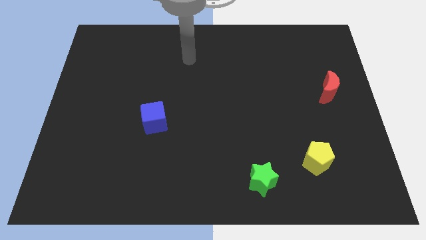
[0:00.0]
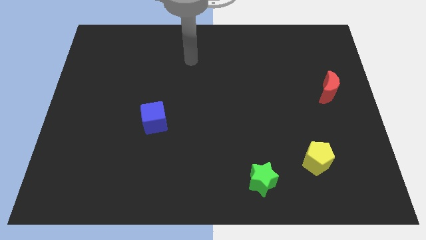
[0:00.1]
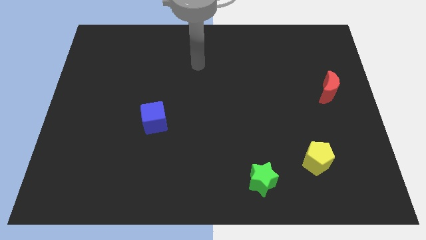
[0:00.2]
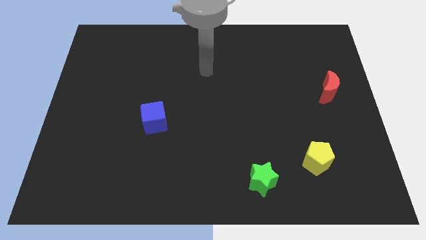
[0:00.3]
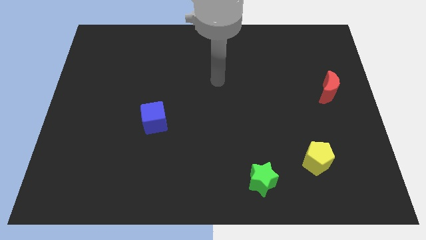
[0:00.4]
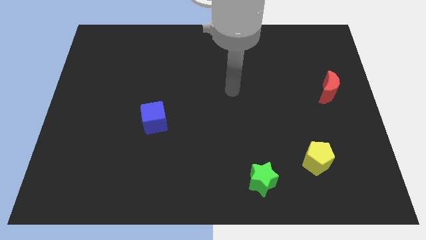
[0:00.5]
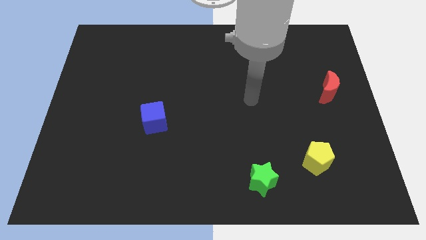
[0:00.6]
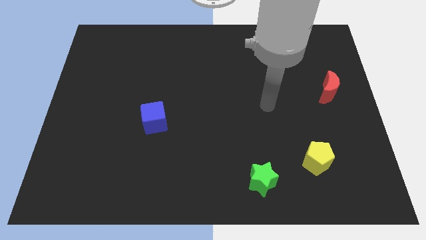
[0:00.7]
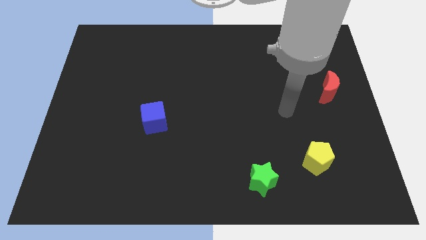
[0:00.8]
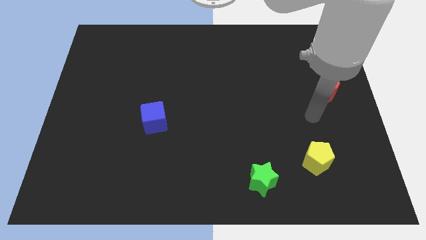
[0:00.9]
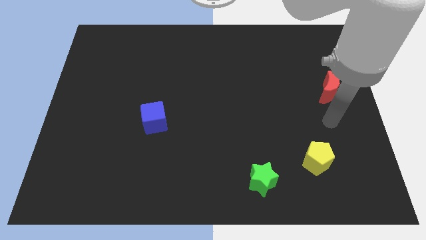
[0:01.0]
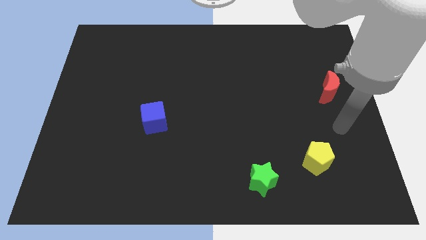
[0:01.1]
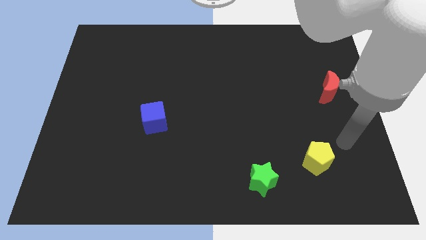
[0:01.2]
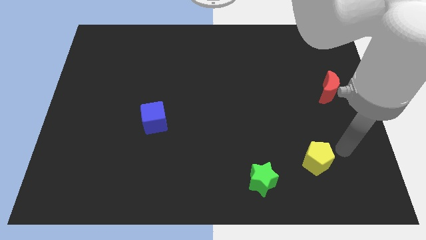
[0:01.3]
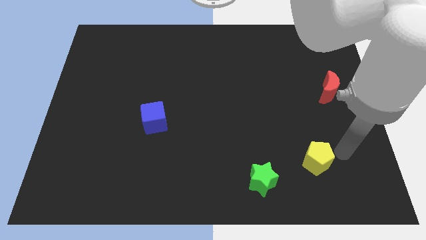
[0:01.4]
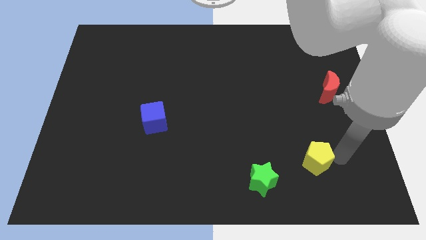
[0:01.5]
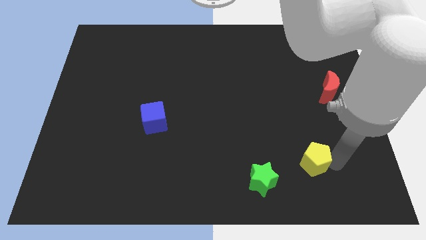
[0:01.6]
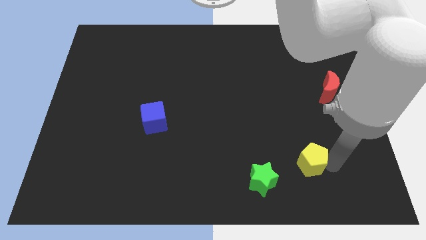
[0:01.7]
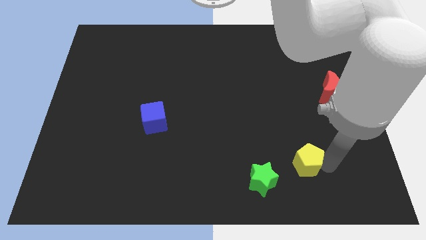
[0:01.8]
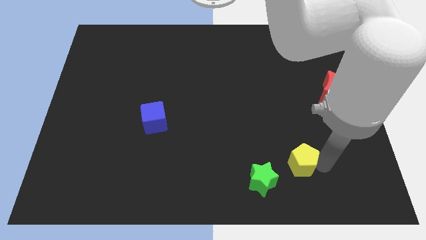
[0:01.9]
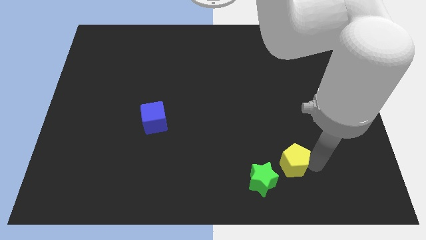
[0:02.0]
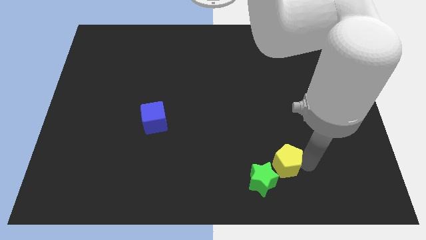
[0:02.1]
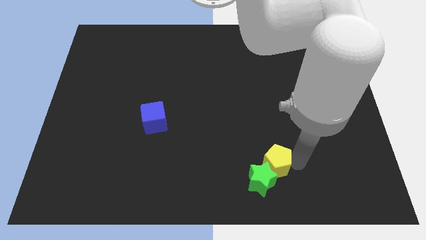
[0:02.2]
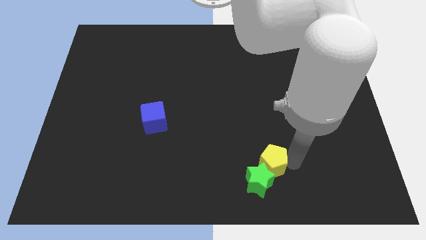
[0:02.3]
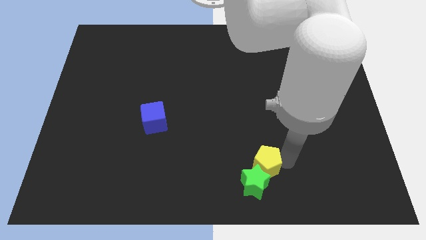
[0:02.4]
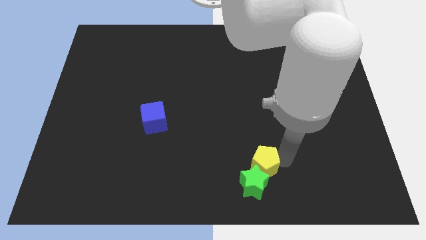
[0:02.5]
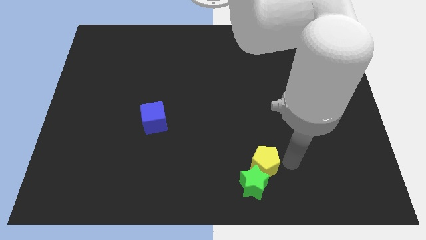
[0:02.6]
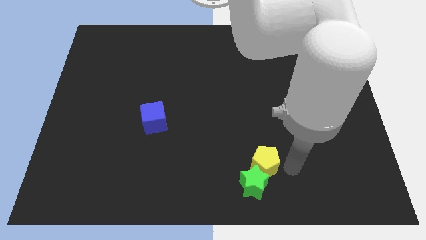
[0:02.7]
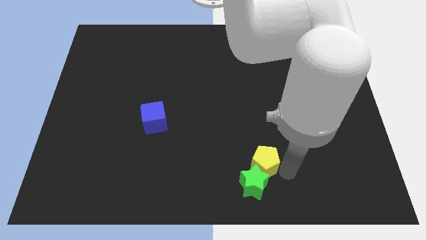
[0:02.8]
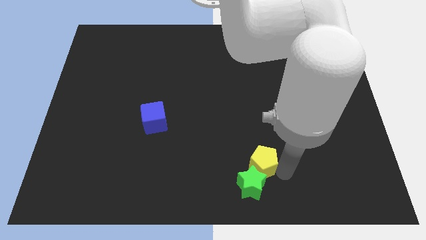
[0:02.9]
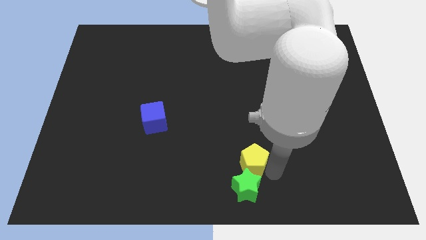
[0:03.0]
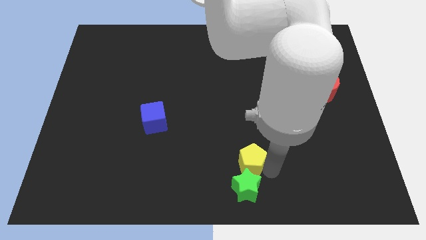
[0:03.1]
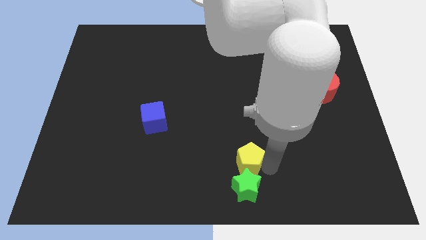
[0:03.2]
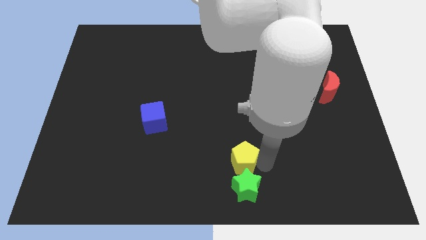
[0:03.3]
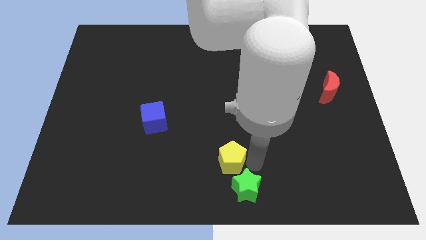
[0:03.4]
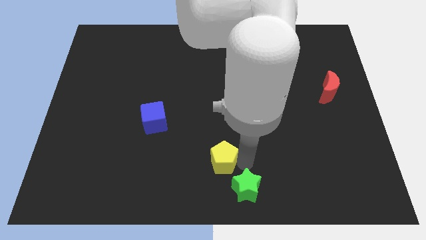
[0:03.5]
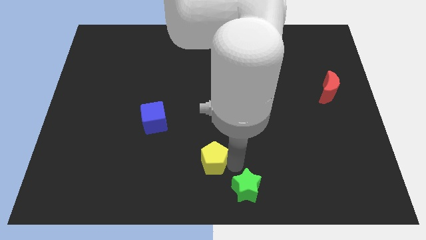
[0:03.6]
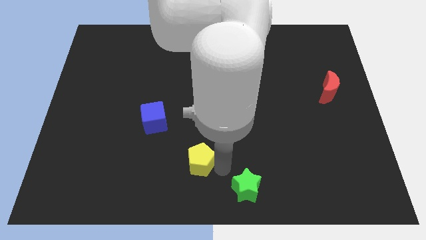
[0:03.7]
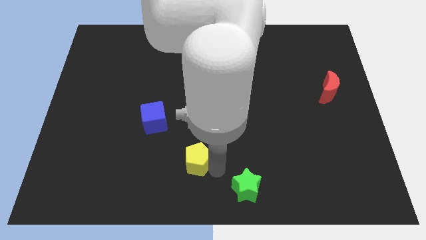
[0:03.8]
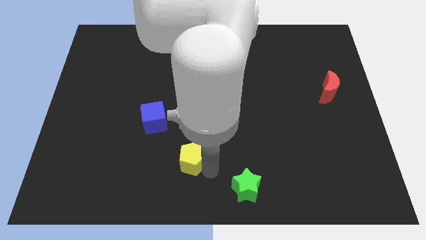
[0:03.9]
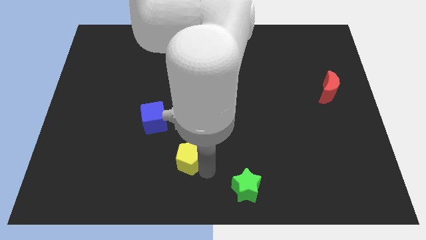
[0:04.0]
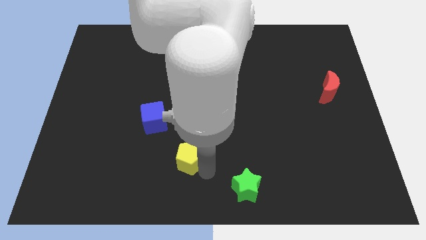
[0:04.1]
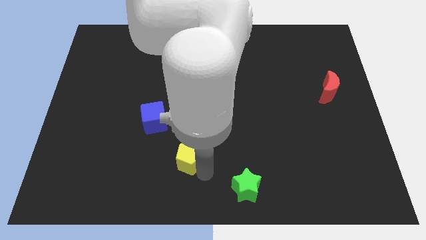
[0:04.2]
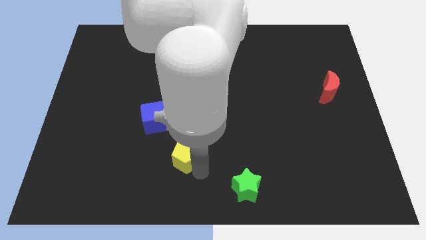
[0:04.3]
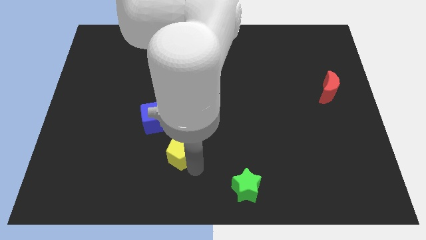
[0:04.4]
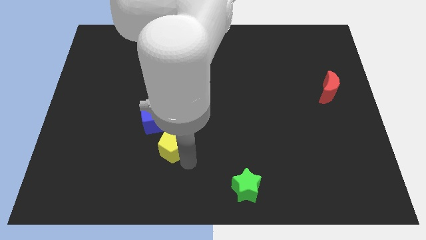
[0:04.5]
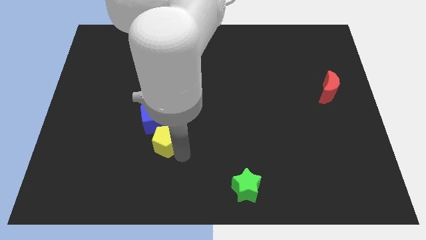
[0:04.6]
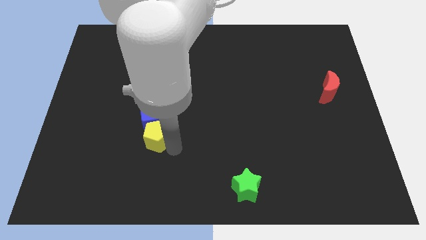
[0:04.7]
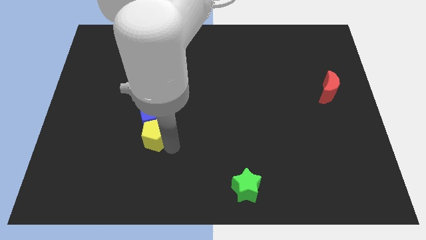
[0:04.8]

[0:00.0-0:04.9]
move the yellow pentagon towards the blue block

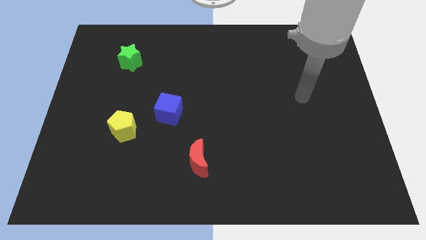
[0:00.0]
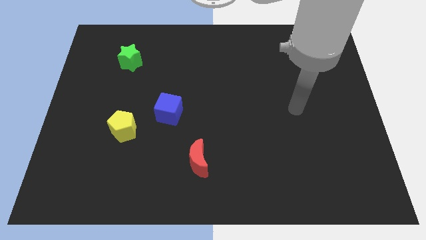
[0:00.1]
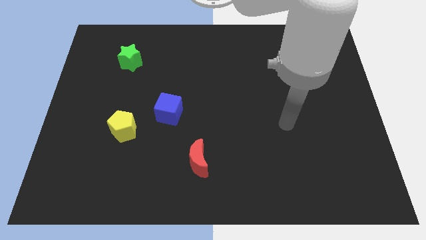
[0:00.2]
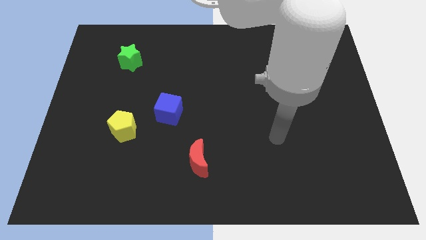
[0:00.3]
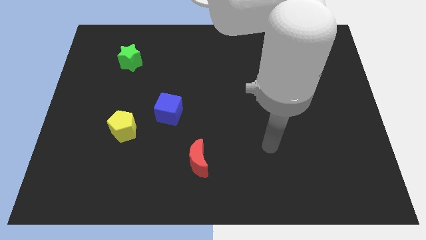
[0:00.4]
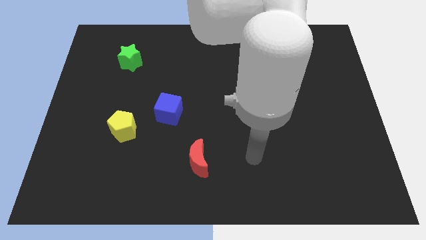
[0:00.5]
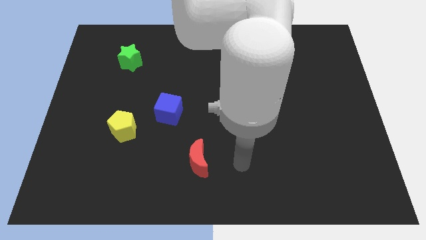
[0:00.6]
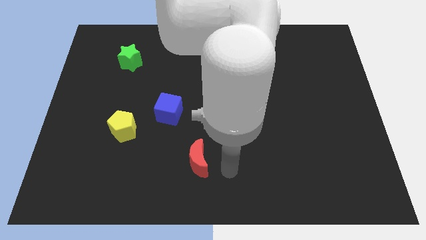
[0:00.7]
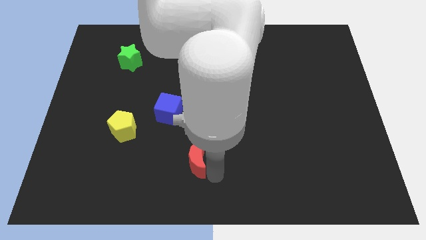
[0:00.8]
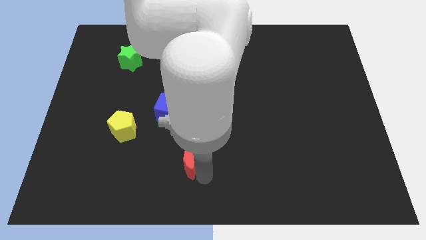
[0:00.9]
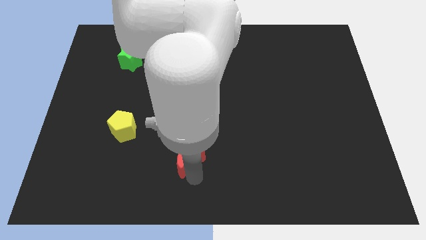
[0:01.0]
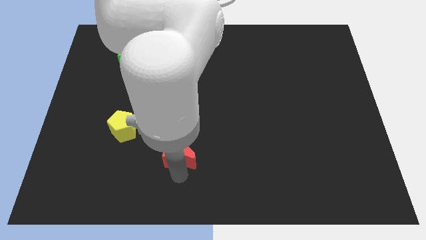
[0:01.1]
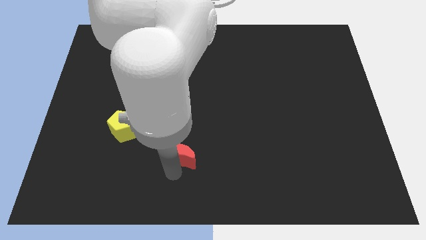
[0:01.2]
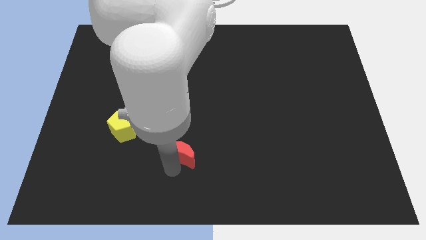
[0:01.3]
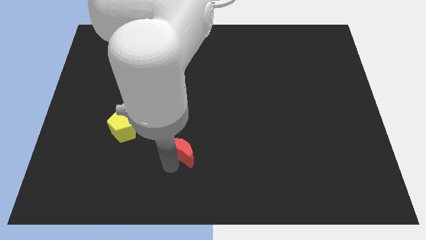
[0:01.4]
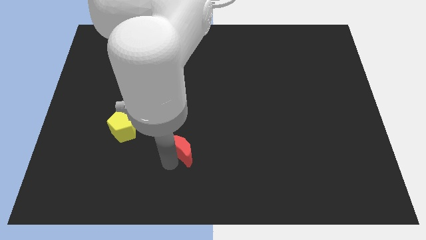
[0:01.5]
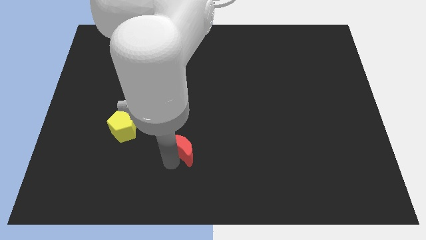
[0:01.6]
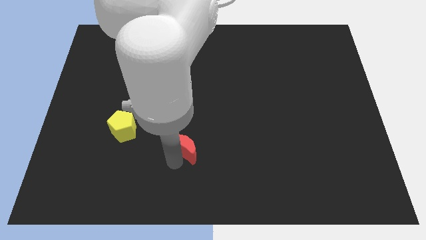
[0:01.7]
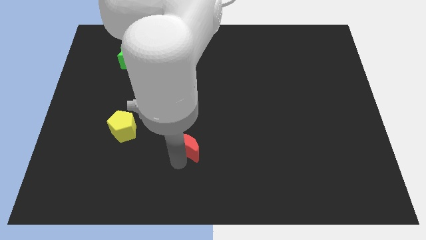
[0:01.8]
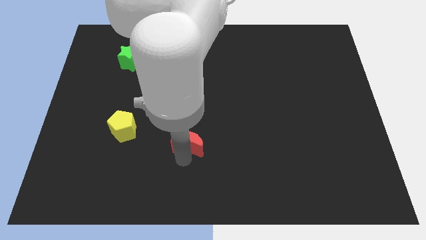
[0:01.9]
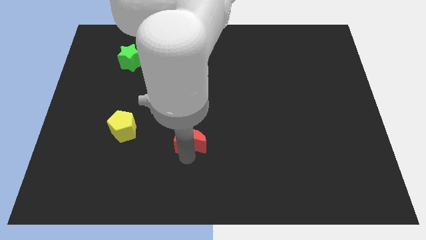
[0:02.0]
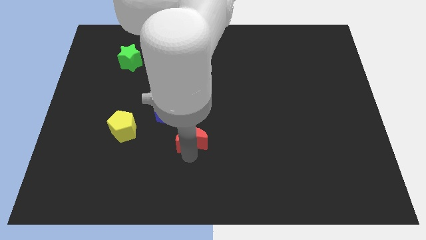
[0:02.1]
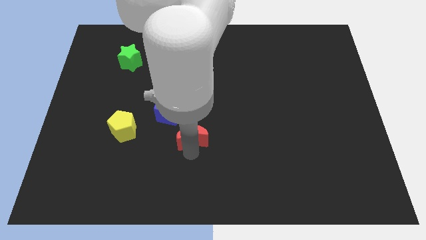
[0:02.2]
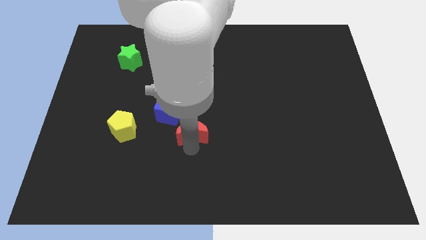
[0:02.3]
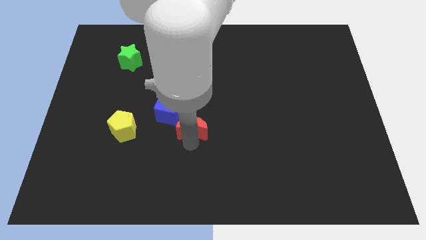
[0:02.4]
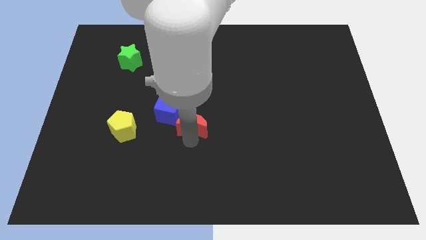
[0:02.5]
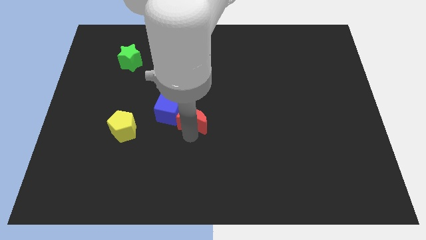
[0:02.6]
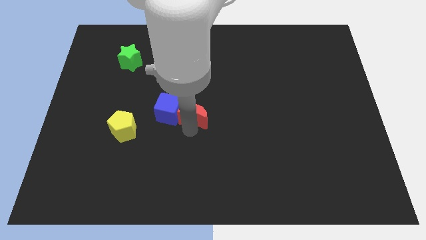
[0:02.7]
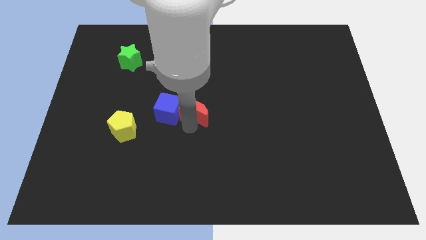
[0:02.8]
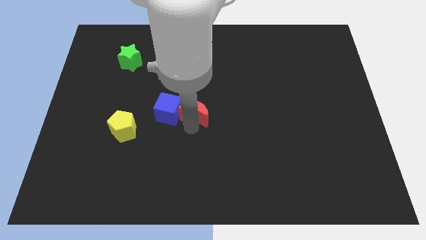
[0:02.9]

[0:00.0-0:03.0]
move the red block towards the blue cube

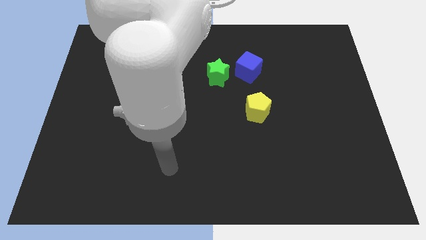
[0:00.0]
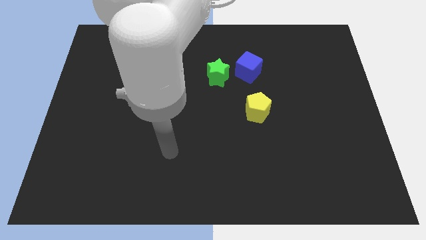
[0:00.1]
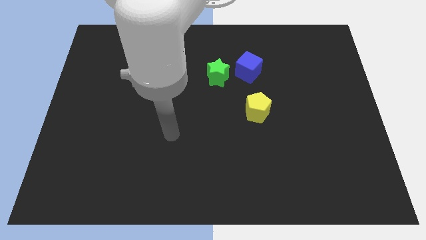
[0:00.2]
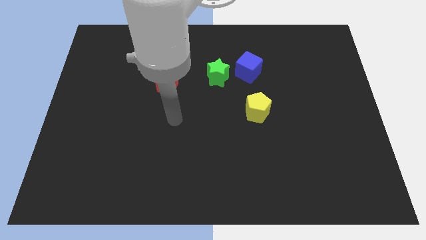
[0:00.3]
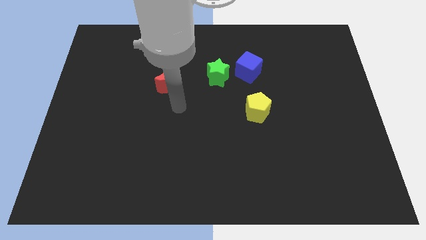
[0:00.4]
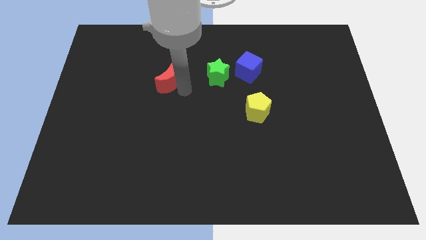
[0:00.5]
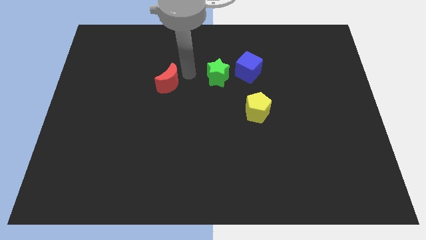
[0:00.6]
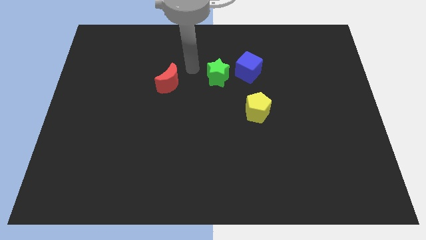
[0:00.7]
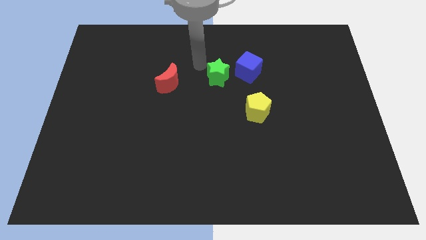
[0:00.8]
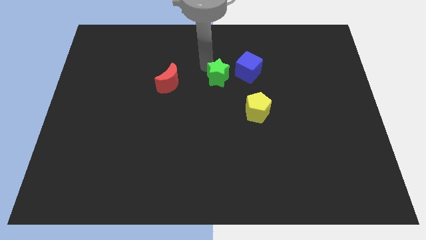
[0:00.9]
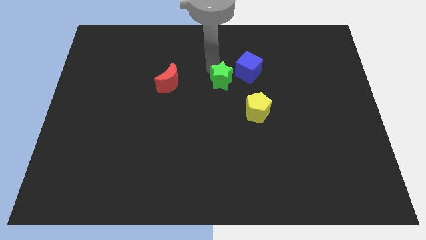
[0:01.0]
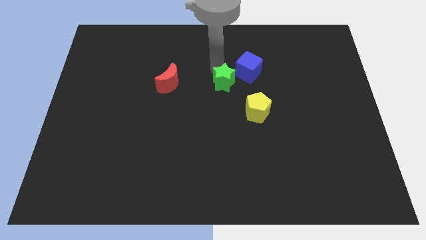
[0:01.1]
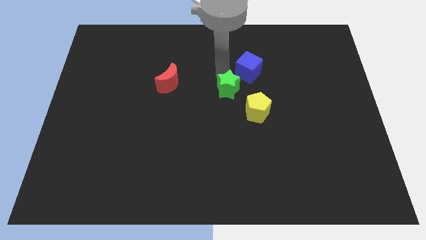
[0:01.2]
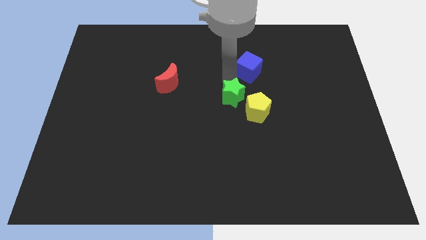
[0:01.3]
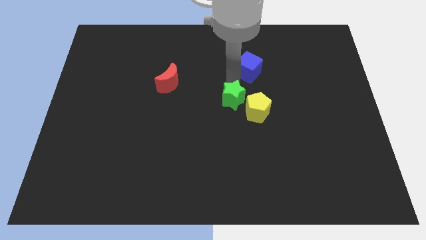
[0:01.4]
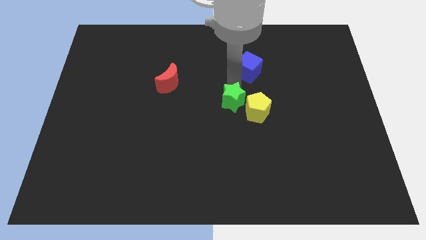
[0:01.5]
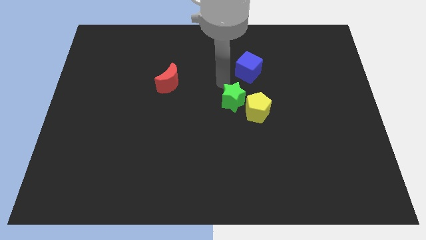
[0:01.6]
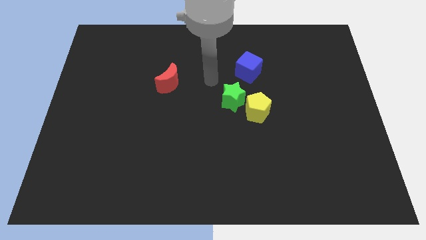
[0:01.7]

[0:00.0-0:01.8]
push the green block towards the yellow pentagon
